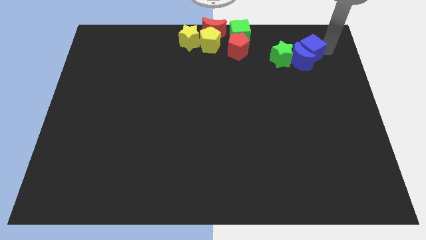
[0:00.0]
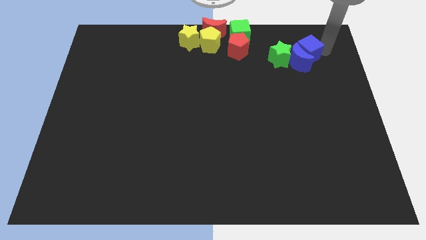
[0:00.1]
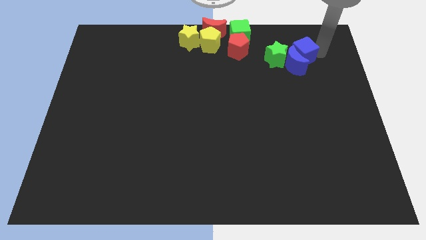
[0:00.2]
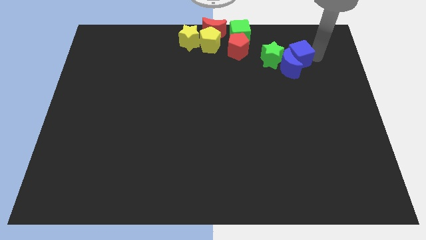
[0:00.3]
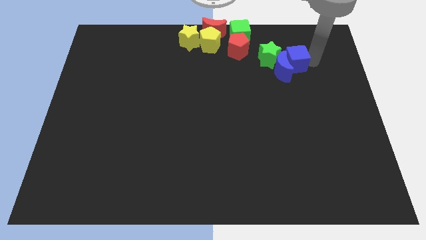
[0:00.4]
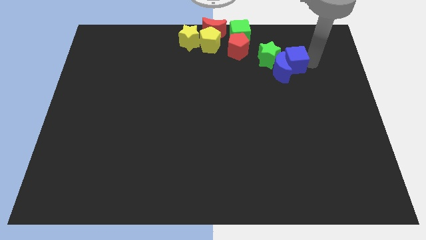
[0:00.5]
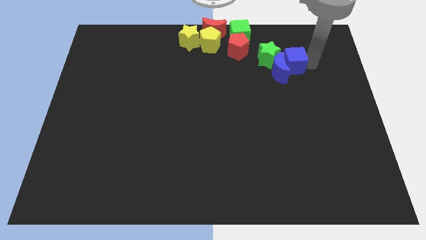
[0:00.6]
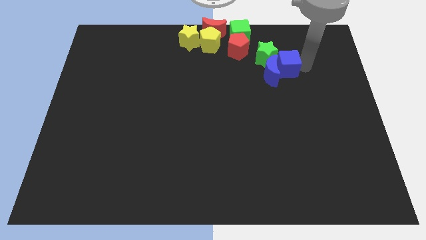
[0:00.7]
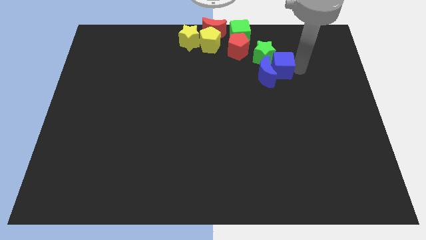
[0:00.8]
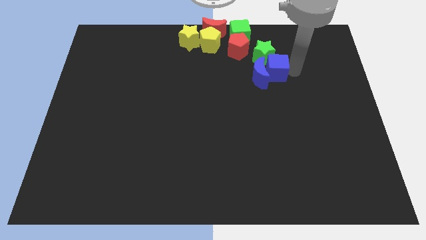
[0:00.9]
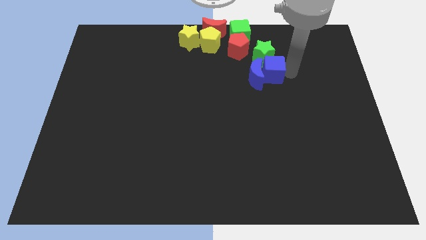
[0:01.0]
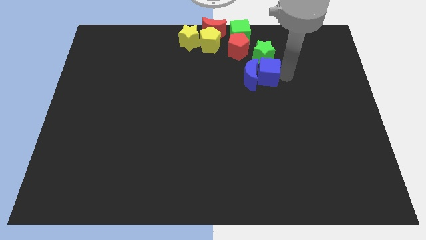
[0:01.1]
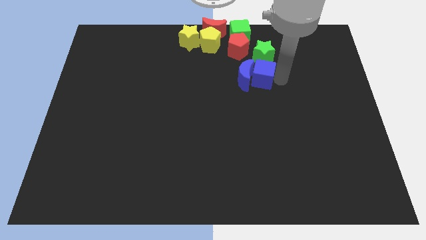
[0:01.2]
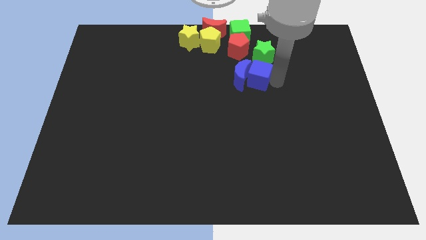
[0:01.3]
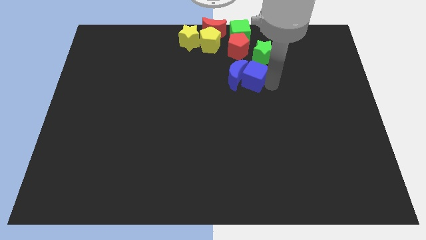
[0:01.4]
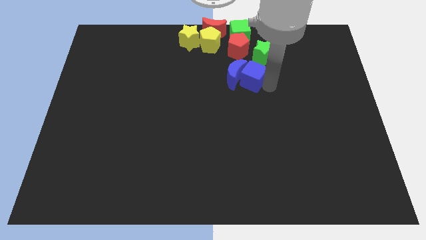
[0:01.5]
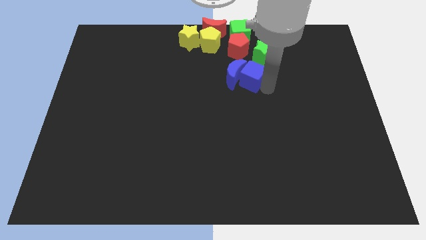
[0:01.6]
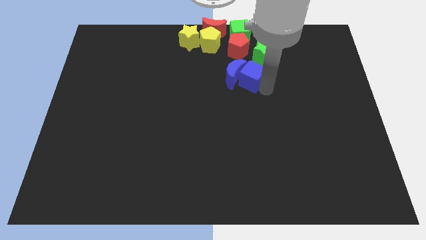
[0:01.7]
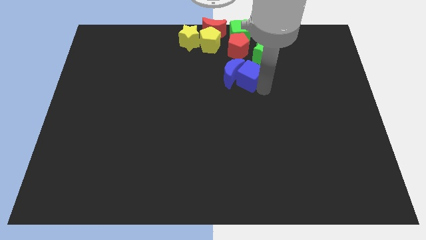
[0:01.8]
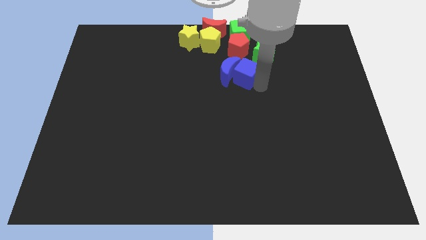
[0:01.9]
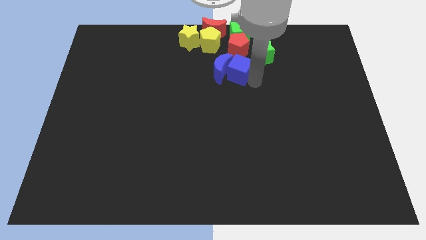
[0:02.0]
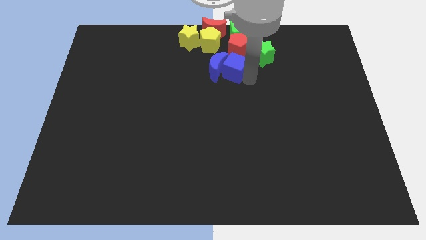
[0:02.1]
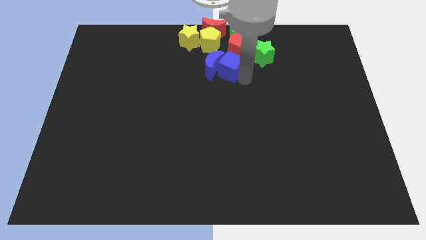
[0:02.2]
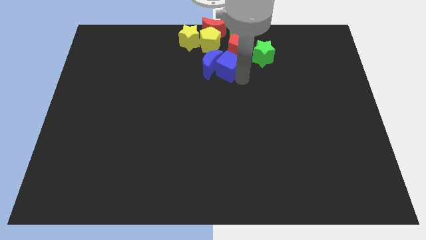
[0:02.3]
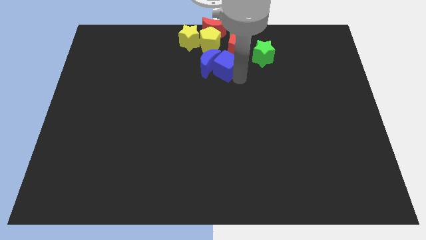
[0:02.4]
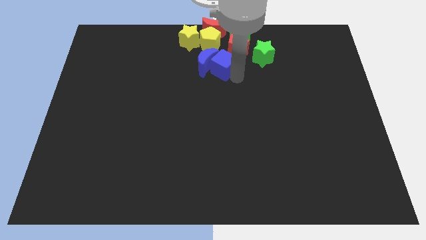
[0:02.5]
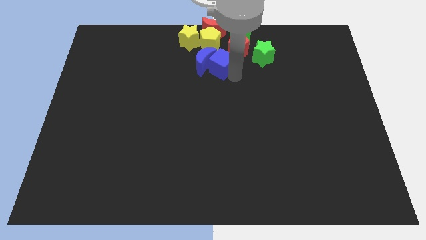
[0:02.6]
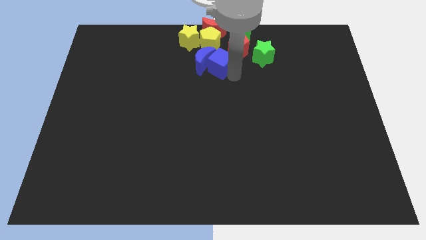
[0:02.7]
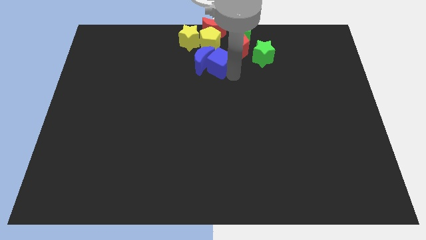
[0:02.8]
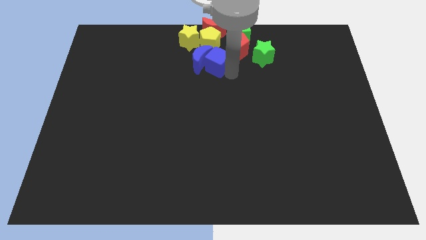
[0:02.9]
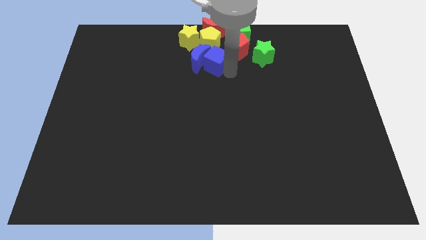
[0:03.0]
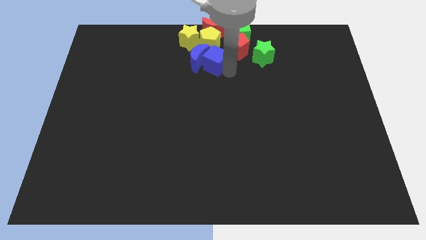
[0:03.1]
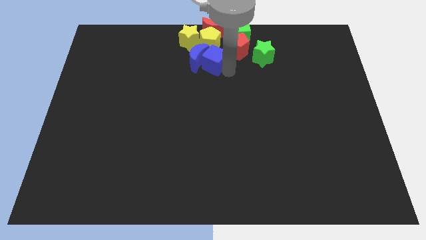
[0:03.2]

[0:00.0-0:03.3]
push the blue crescent to the bottom of the yellow pentagon using blue cube

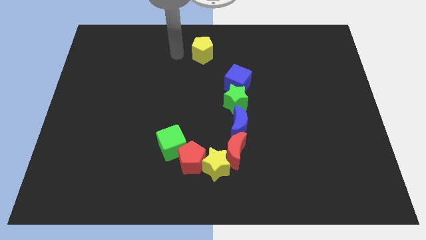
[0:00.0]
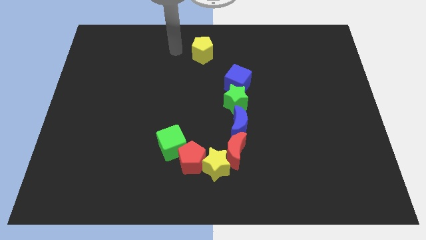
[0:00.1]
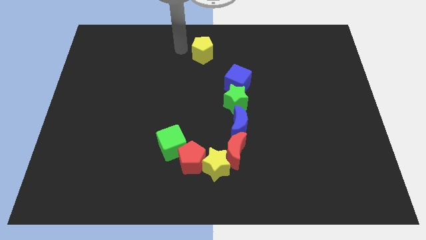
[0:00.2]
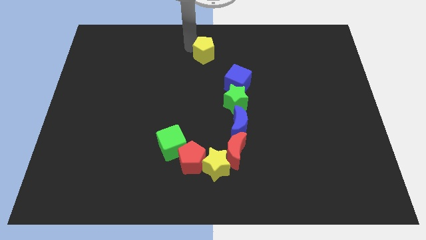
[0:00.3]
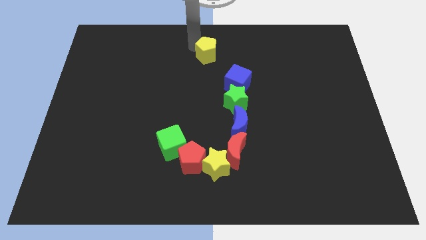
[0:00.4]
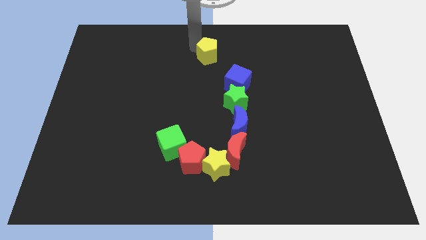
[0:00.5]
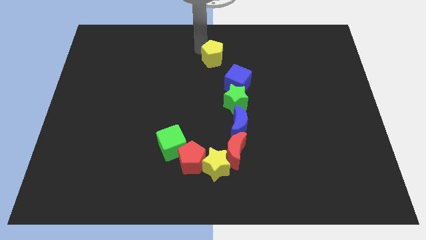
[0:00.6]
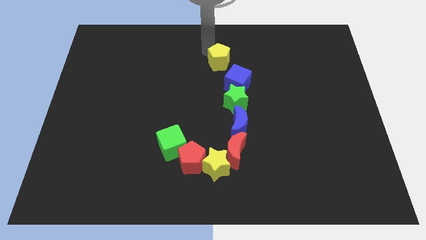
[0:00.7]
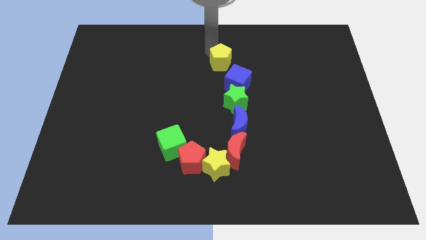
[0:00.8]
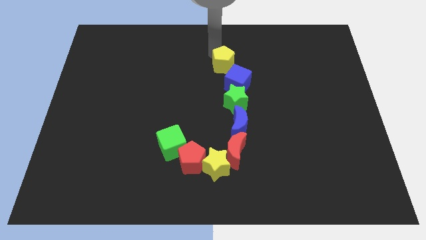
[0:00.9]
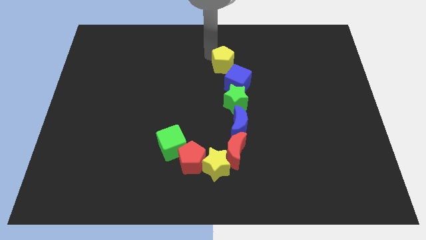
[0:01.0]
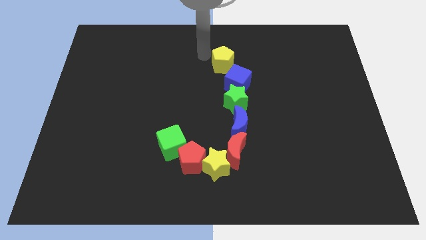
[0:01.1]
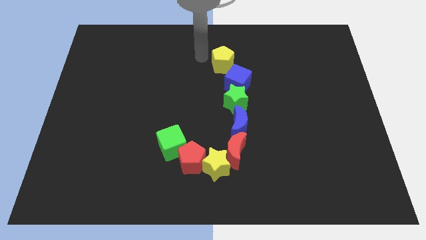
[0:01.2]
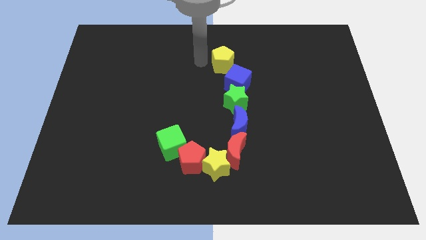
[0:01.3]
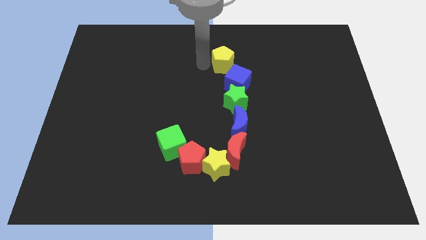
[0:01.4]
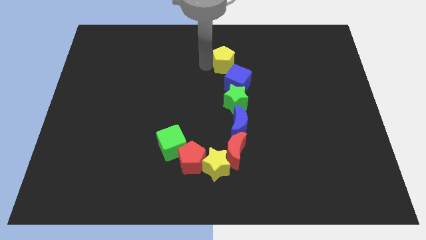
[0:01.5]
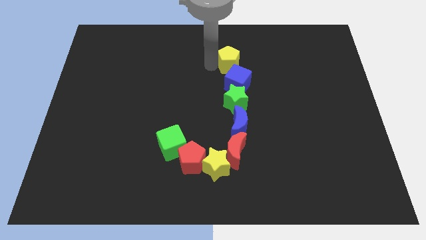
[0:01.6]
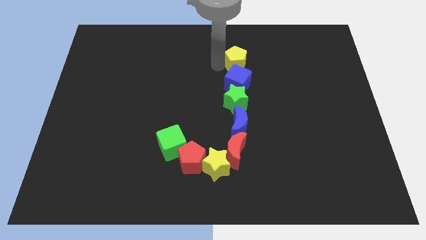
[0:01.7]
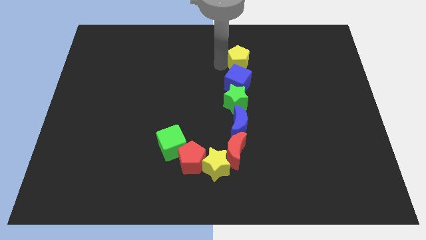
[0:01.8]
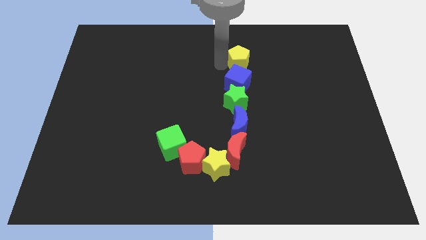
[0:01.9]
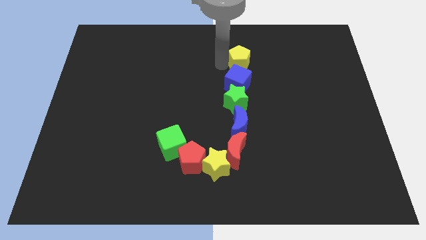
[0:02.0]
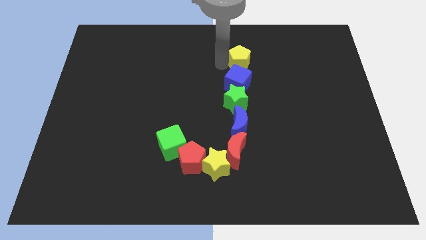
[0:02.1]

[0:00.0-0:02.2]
put the yellow pentagon above the blue cube

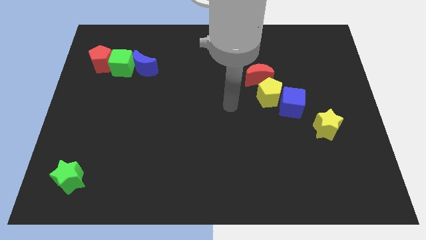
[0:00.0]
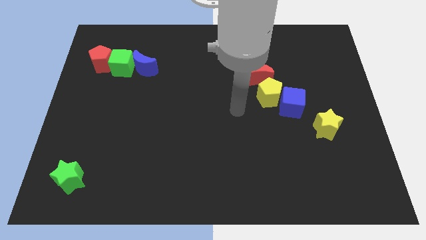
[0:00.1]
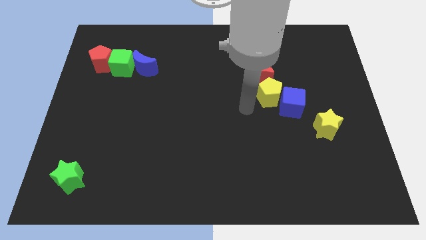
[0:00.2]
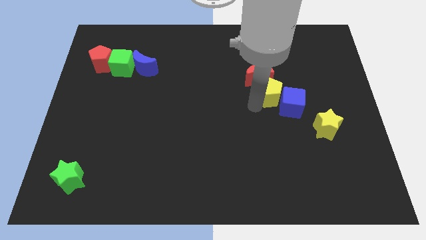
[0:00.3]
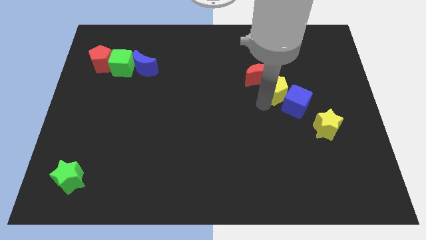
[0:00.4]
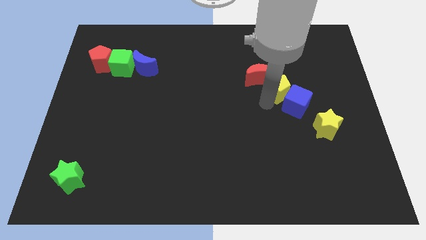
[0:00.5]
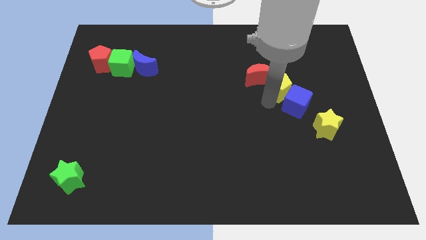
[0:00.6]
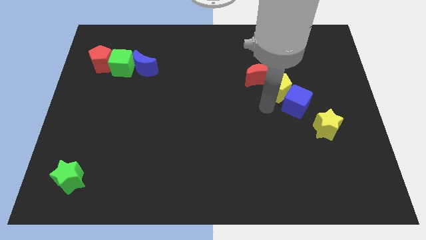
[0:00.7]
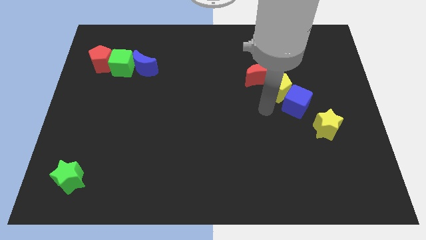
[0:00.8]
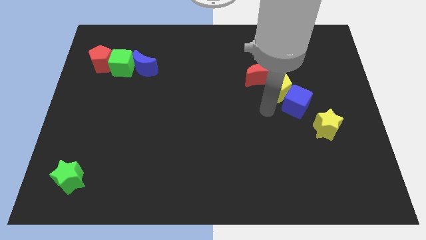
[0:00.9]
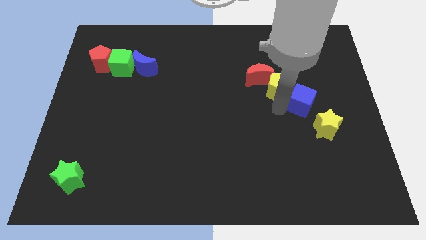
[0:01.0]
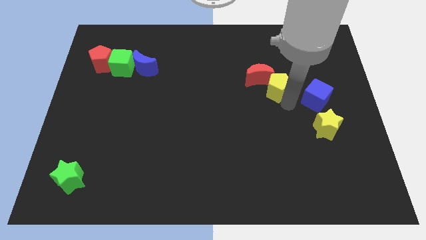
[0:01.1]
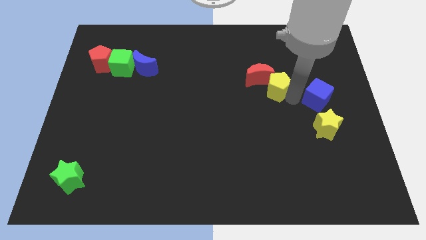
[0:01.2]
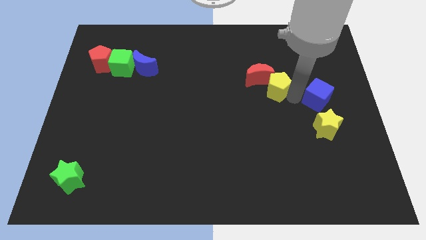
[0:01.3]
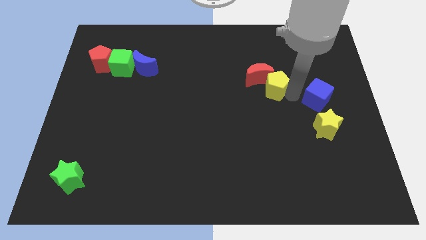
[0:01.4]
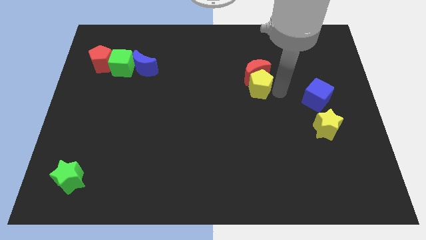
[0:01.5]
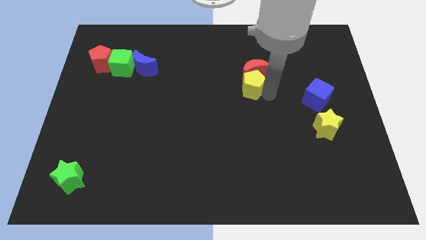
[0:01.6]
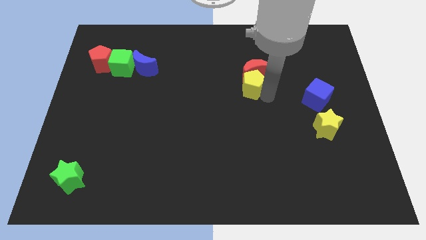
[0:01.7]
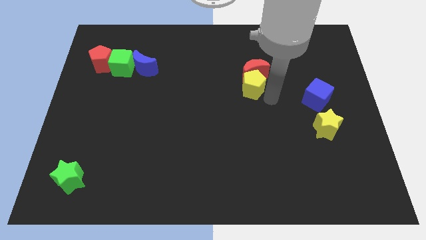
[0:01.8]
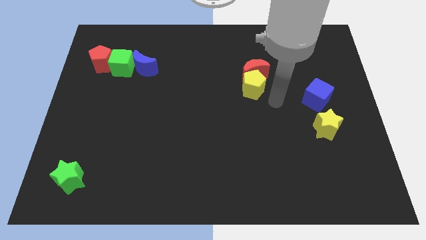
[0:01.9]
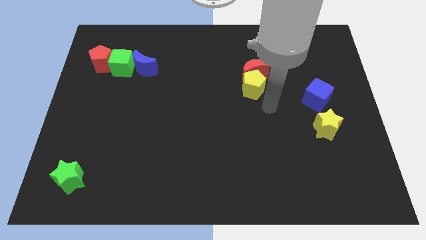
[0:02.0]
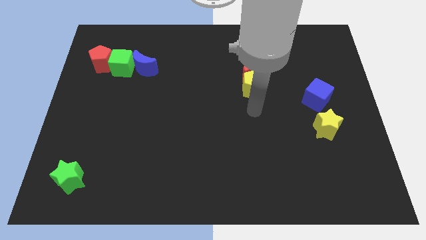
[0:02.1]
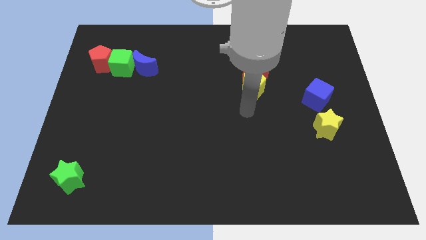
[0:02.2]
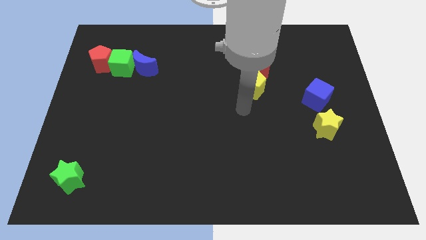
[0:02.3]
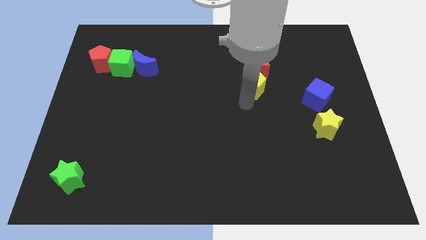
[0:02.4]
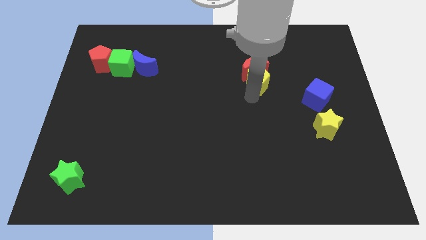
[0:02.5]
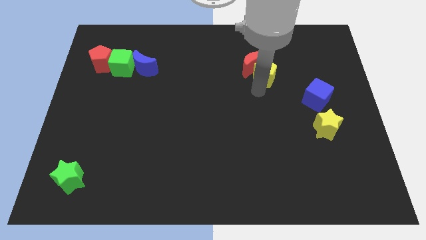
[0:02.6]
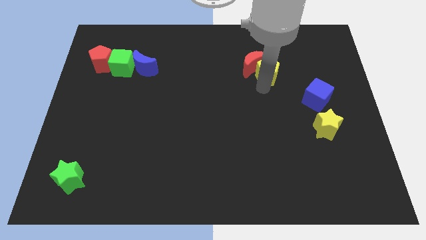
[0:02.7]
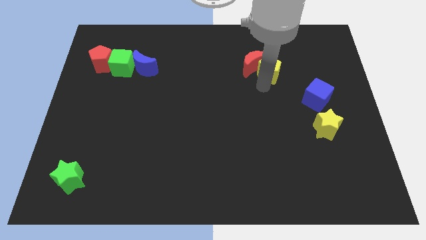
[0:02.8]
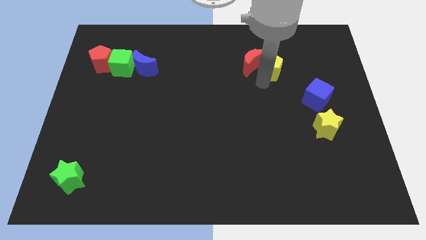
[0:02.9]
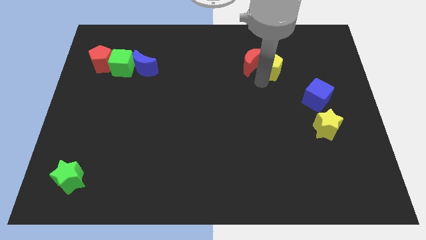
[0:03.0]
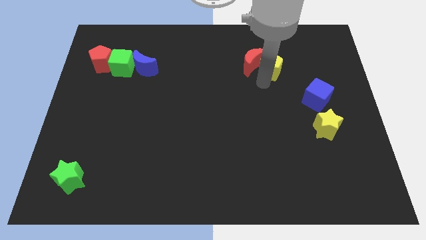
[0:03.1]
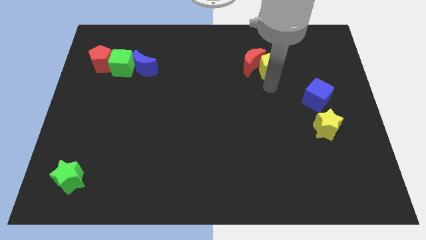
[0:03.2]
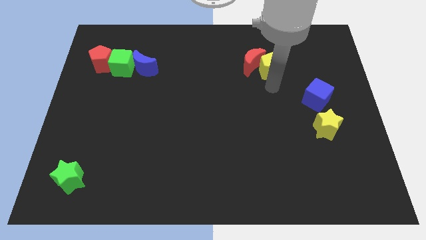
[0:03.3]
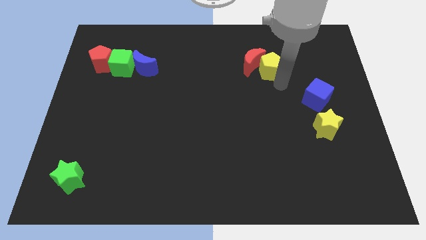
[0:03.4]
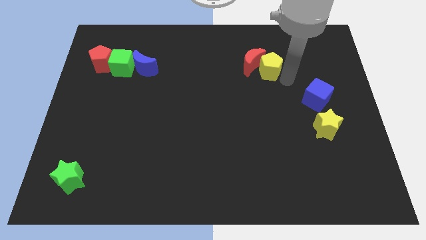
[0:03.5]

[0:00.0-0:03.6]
move the yellow pentagon into the red moon
